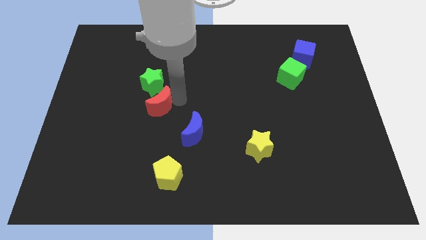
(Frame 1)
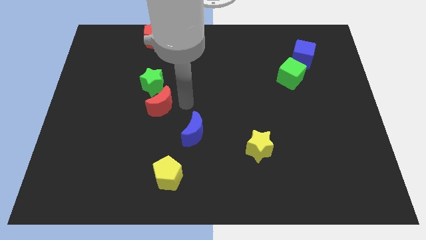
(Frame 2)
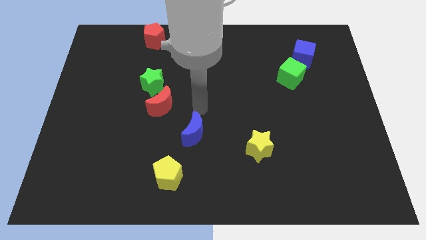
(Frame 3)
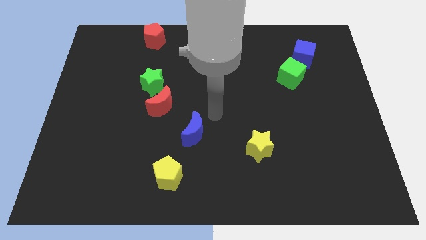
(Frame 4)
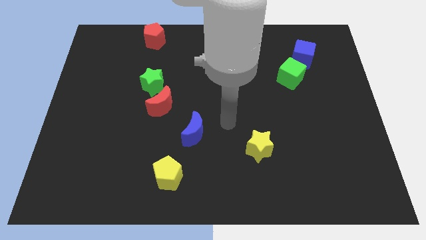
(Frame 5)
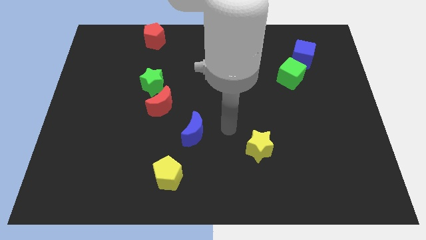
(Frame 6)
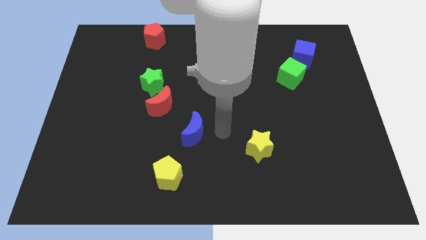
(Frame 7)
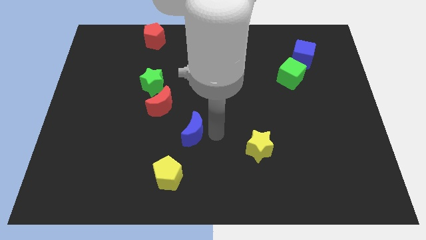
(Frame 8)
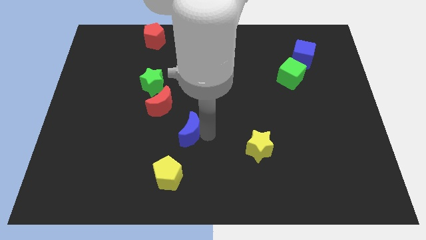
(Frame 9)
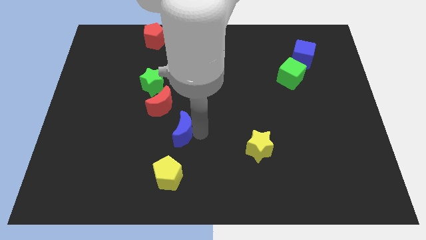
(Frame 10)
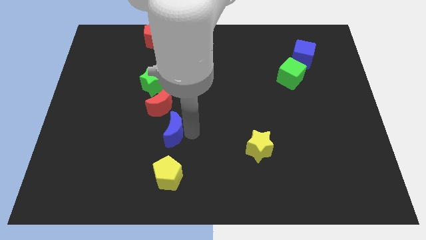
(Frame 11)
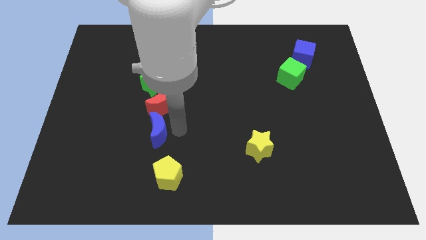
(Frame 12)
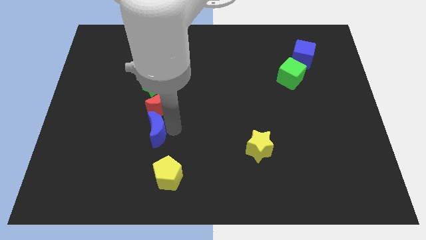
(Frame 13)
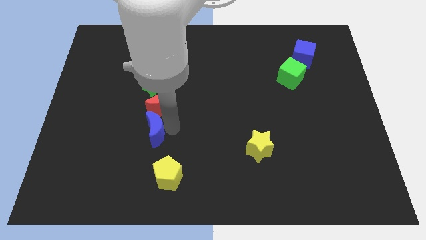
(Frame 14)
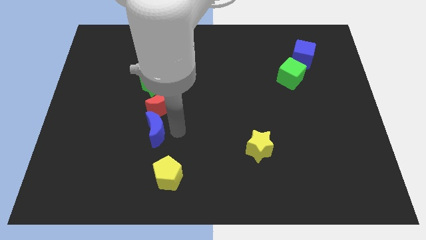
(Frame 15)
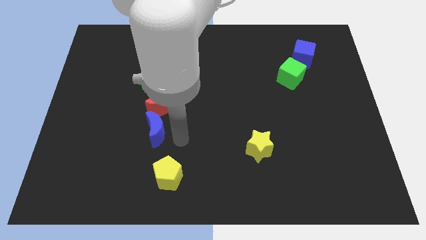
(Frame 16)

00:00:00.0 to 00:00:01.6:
place the blue moon below the red moon

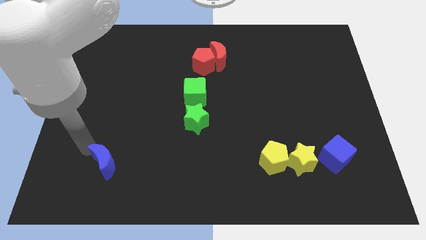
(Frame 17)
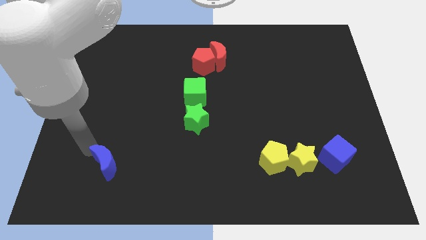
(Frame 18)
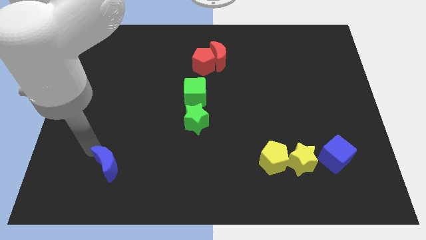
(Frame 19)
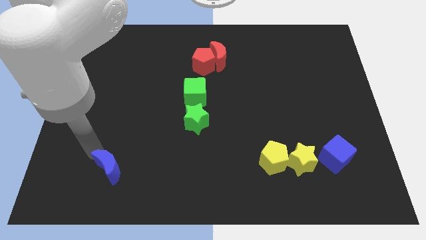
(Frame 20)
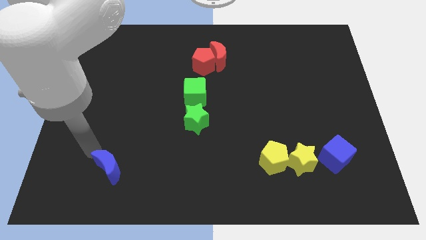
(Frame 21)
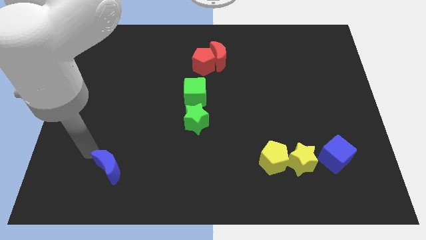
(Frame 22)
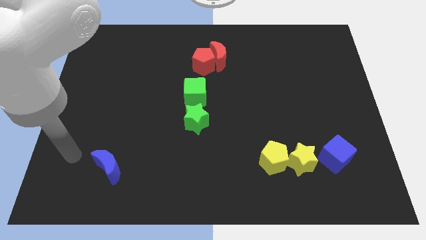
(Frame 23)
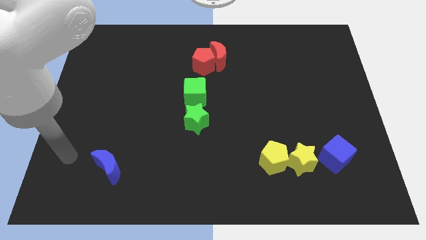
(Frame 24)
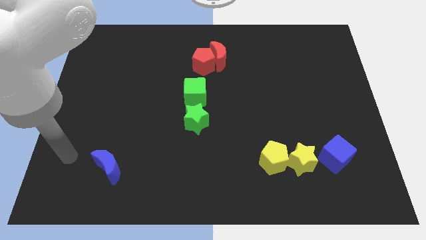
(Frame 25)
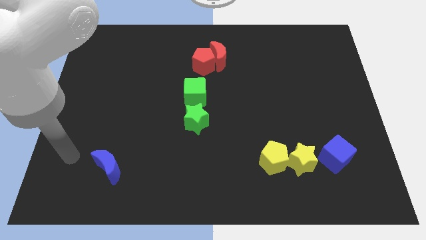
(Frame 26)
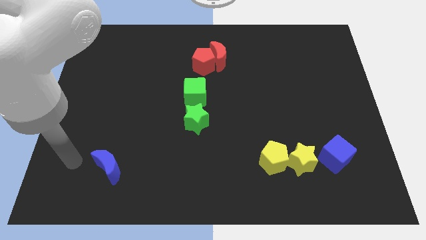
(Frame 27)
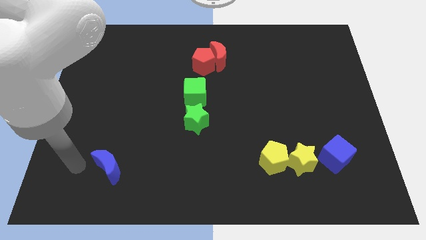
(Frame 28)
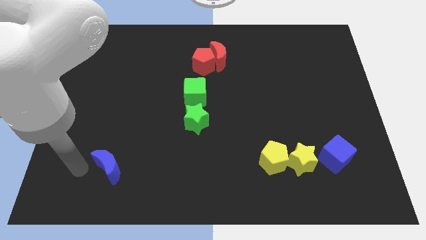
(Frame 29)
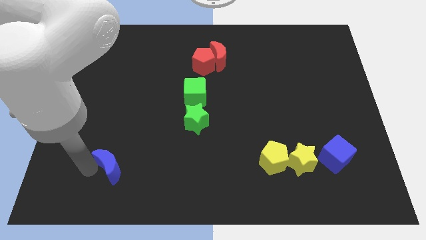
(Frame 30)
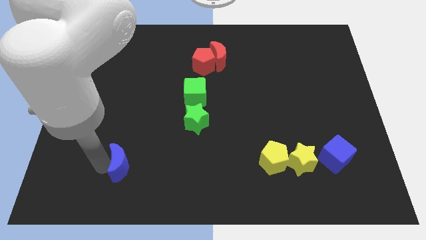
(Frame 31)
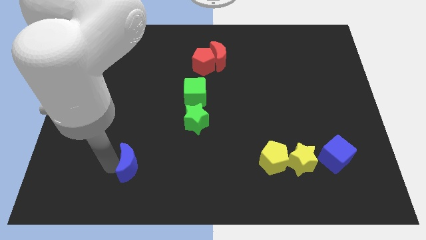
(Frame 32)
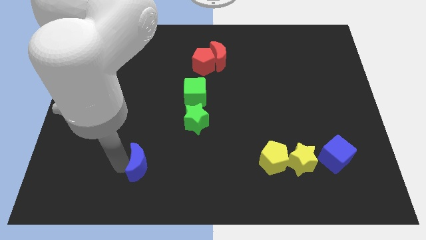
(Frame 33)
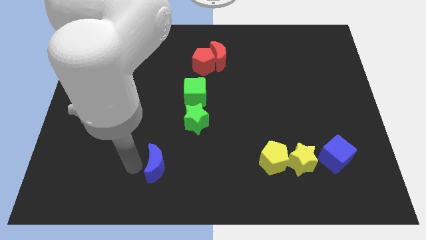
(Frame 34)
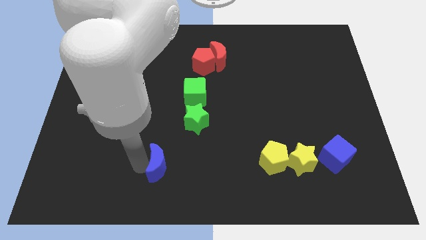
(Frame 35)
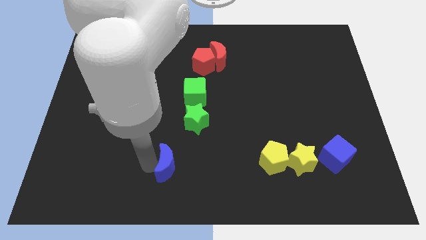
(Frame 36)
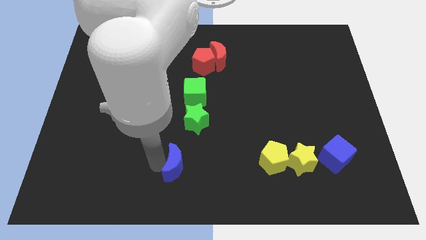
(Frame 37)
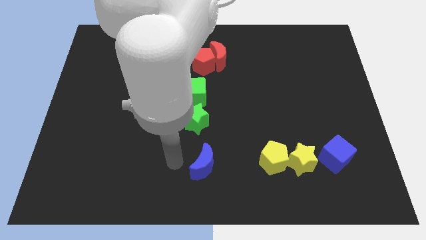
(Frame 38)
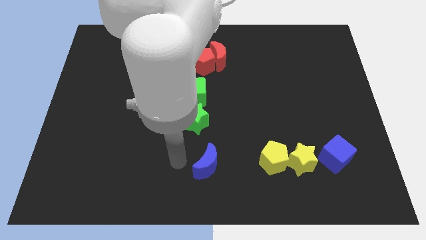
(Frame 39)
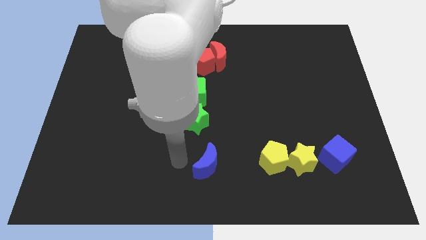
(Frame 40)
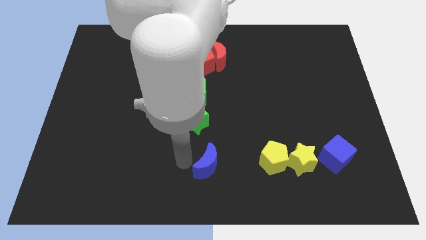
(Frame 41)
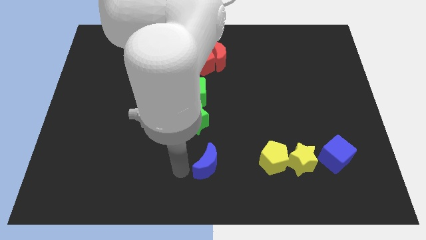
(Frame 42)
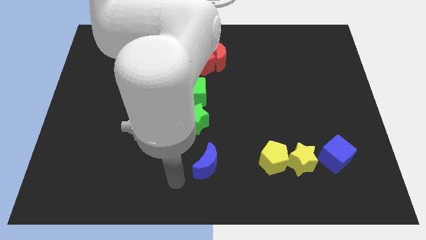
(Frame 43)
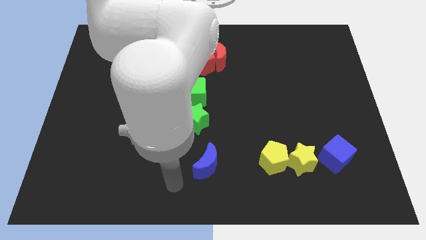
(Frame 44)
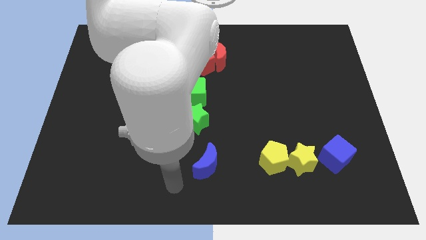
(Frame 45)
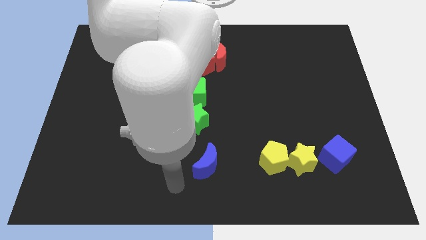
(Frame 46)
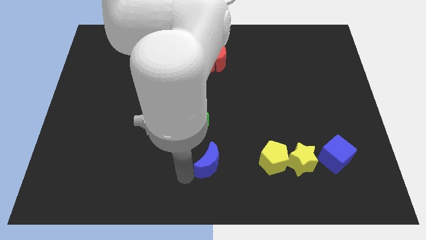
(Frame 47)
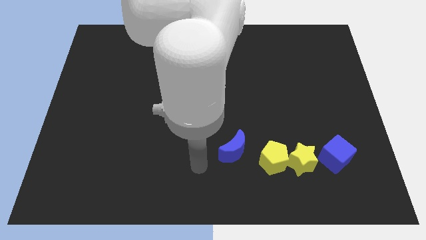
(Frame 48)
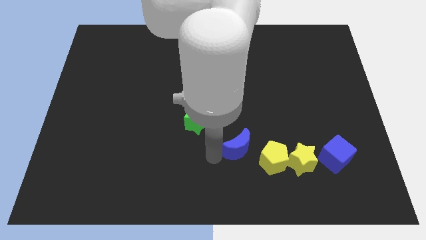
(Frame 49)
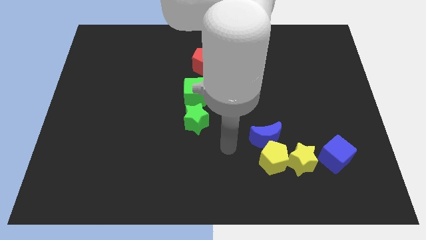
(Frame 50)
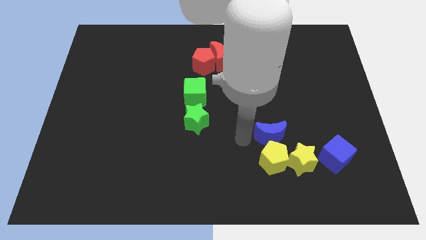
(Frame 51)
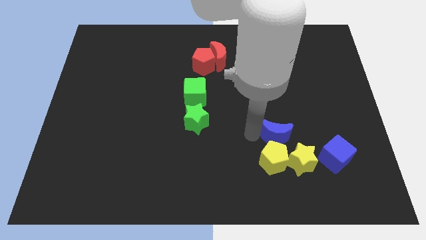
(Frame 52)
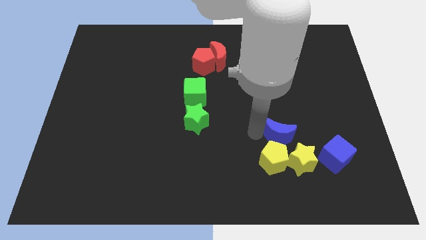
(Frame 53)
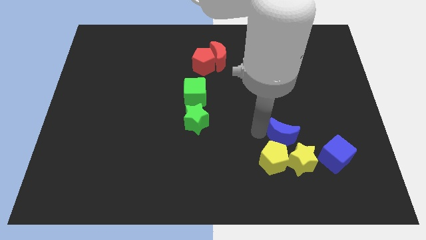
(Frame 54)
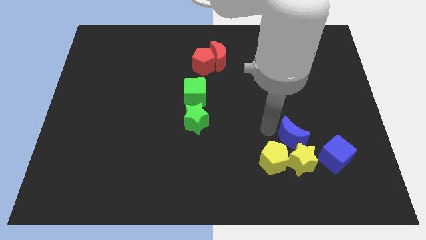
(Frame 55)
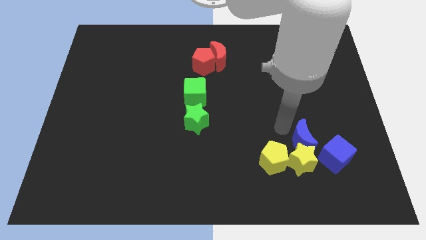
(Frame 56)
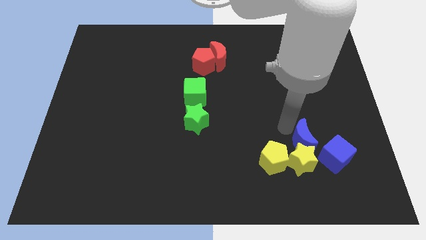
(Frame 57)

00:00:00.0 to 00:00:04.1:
push blue crescent on top of yellow star

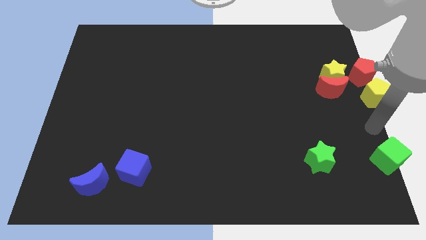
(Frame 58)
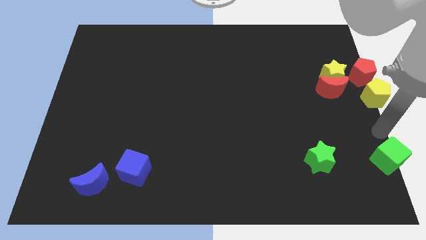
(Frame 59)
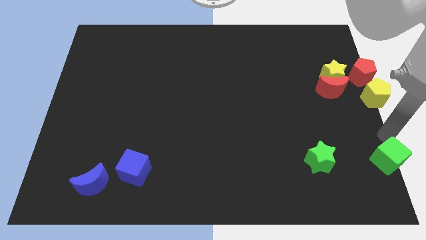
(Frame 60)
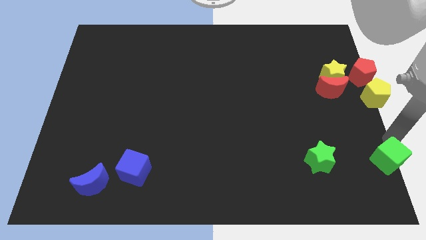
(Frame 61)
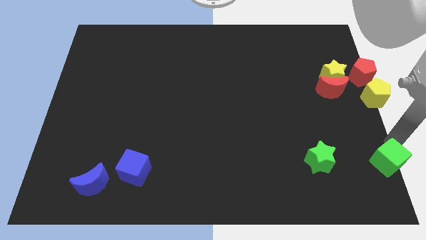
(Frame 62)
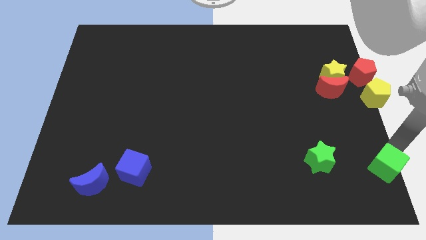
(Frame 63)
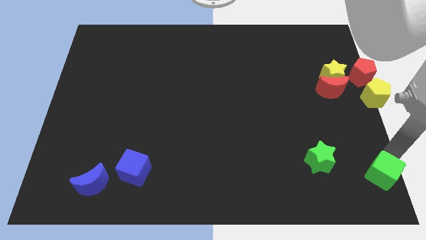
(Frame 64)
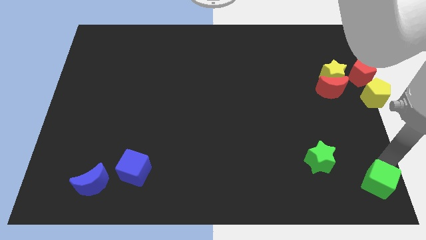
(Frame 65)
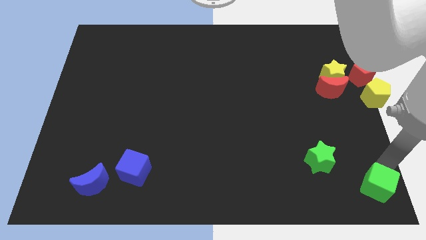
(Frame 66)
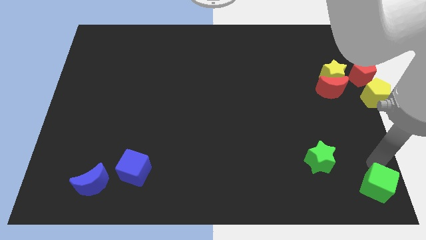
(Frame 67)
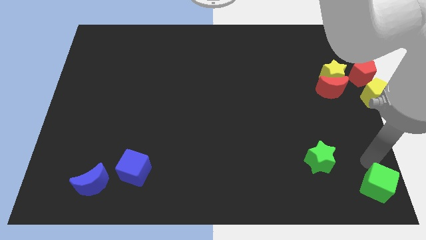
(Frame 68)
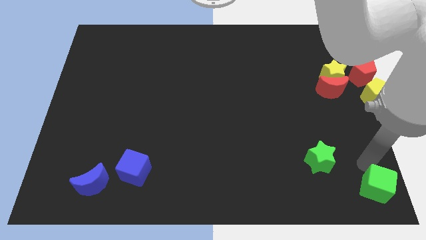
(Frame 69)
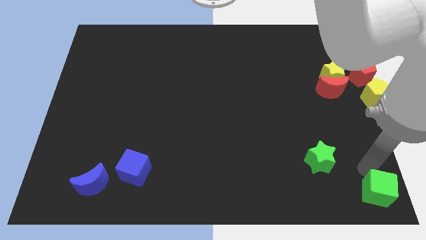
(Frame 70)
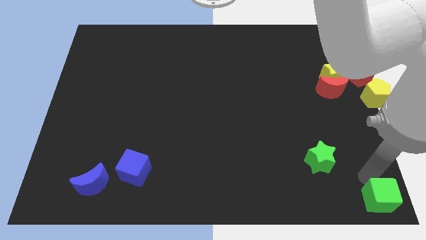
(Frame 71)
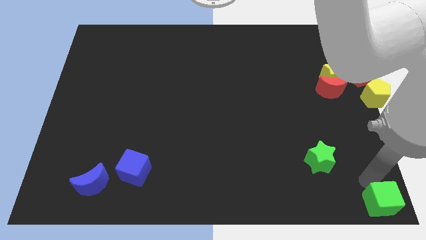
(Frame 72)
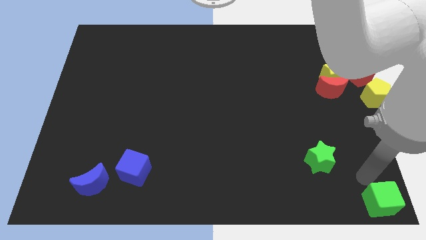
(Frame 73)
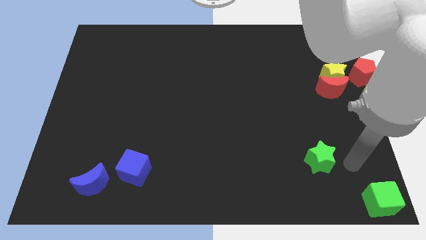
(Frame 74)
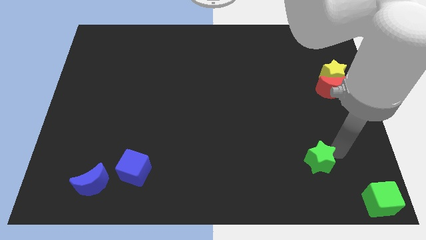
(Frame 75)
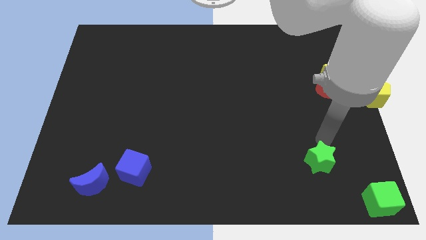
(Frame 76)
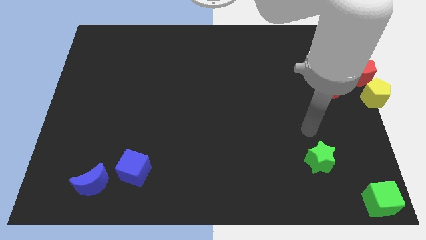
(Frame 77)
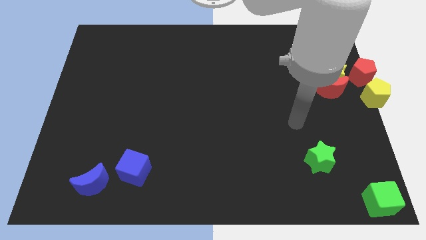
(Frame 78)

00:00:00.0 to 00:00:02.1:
move the green cube to the bottom right on the board

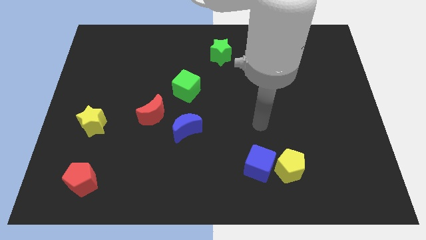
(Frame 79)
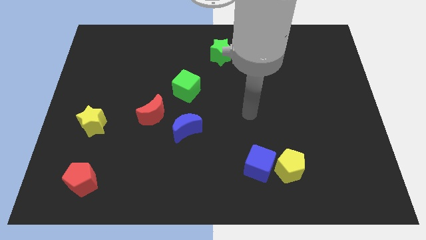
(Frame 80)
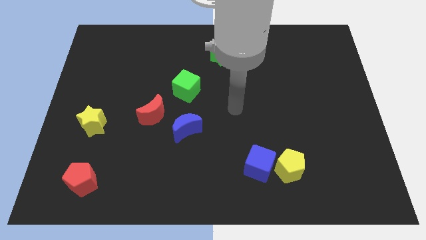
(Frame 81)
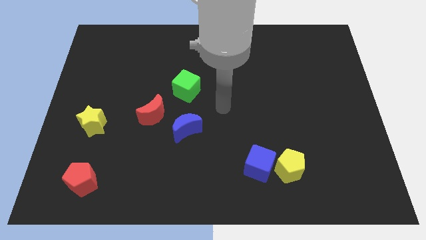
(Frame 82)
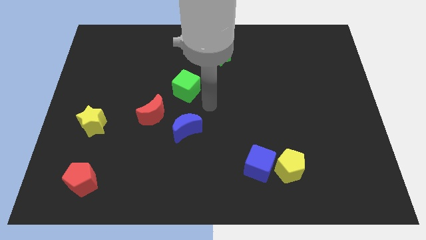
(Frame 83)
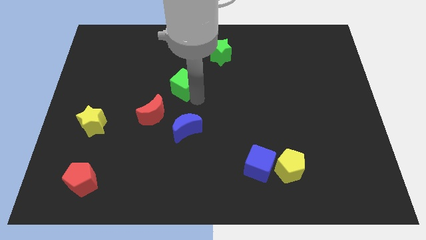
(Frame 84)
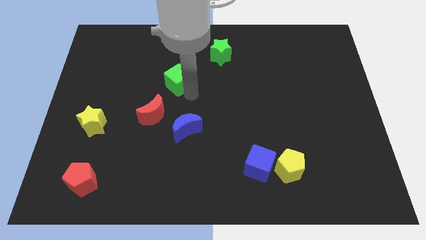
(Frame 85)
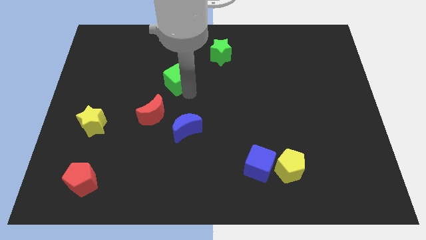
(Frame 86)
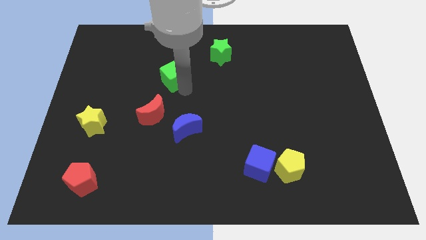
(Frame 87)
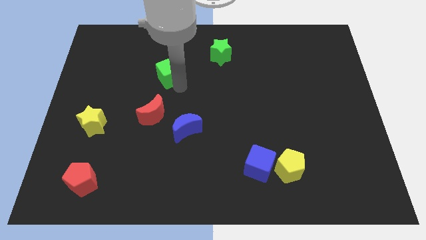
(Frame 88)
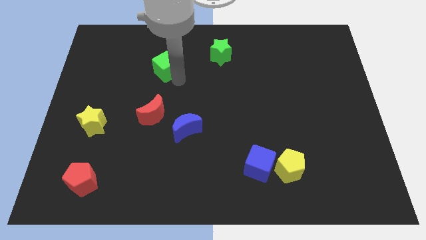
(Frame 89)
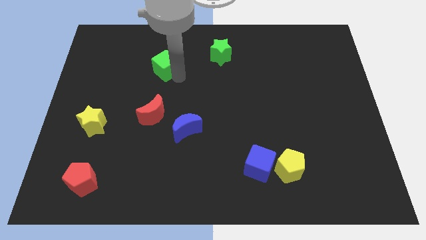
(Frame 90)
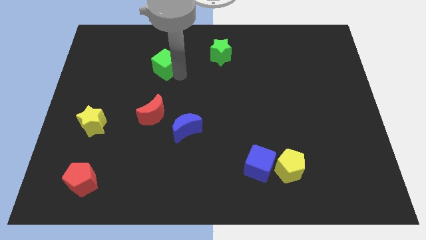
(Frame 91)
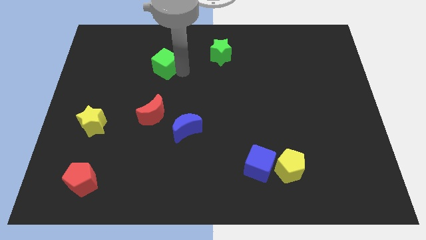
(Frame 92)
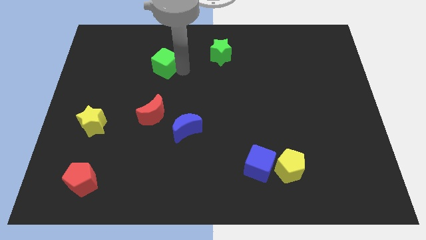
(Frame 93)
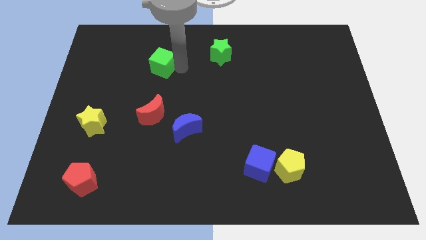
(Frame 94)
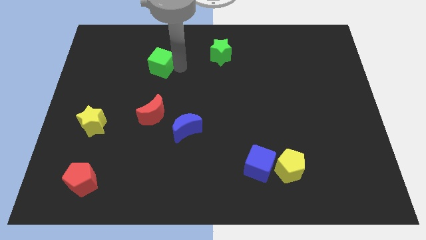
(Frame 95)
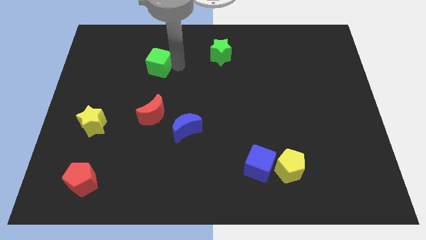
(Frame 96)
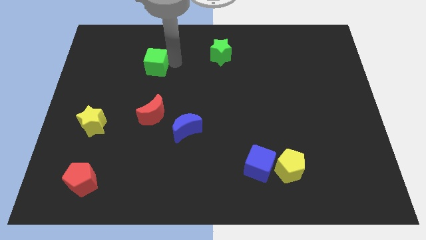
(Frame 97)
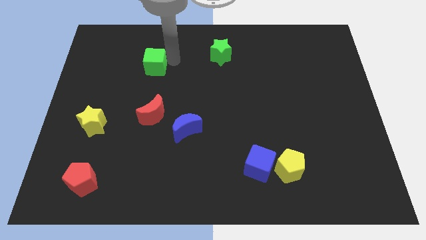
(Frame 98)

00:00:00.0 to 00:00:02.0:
place the green cube on top of the red moon
